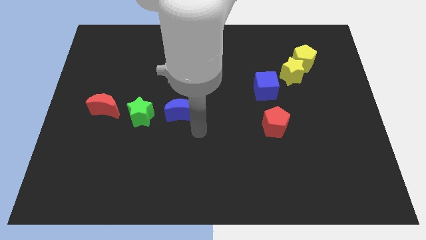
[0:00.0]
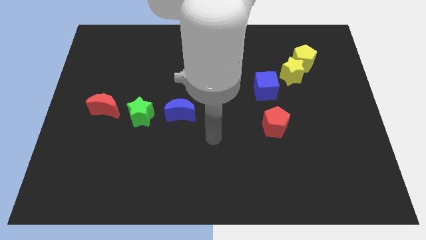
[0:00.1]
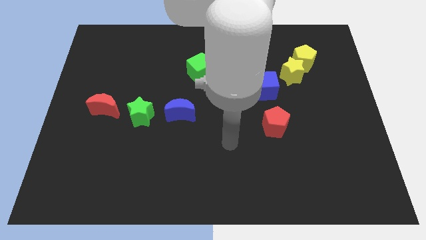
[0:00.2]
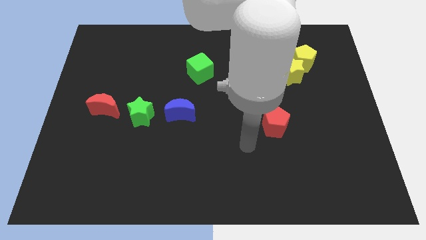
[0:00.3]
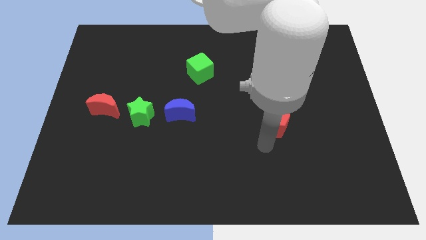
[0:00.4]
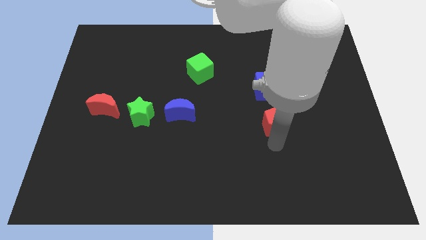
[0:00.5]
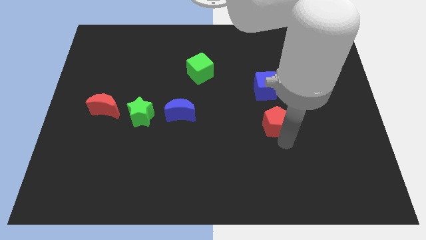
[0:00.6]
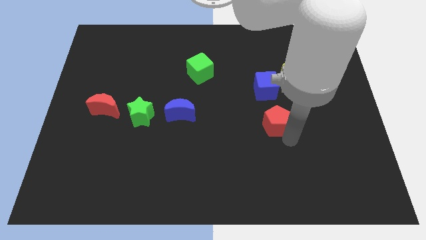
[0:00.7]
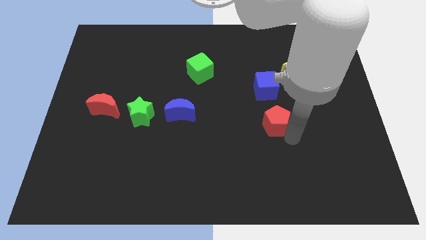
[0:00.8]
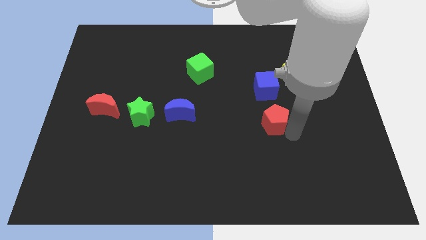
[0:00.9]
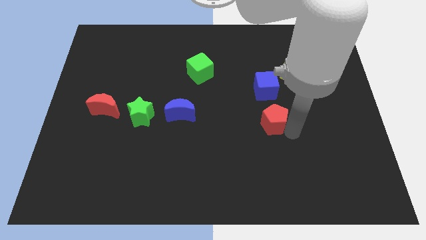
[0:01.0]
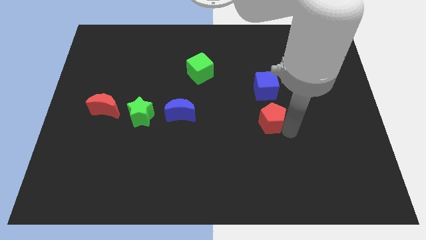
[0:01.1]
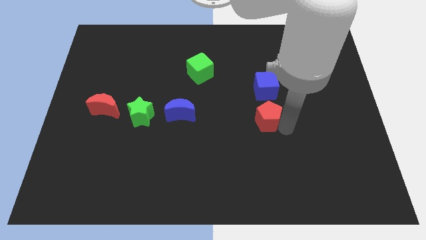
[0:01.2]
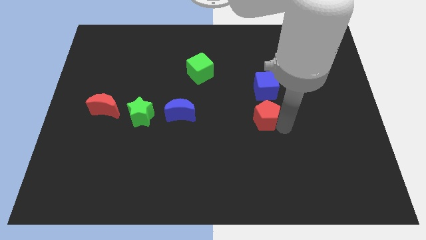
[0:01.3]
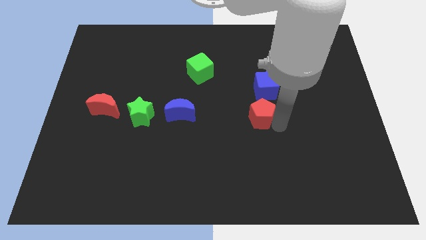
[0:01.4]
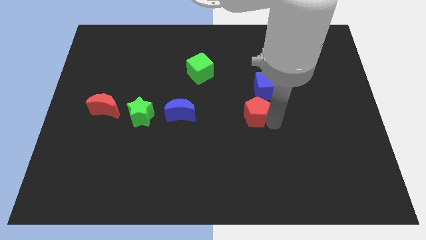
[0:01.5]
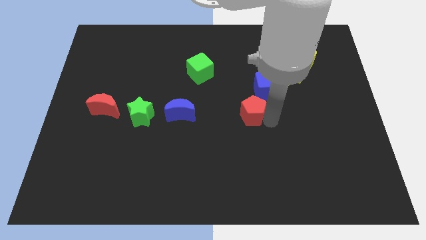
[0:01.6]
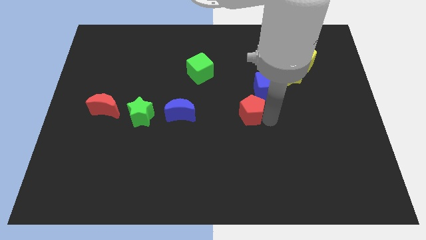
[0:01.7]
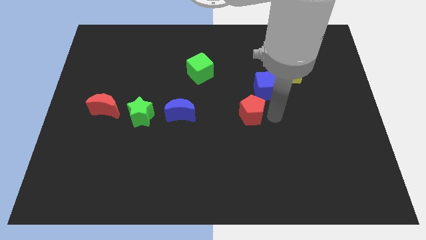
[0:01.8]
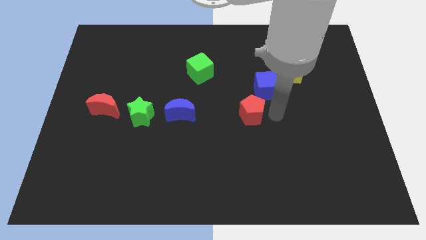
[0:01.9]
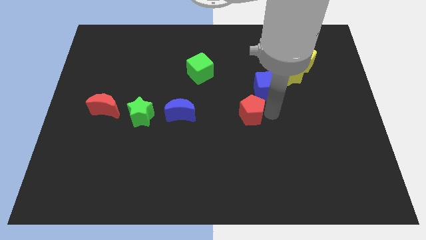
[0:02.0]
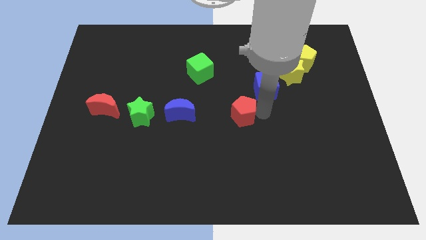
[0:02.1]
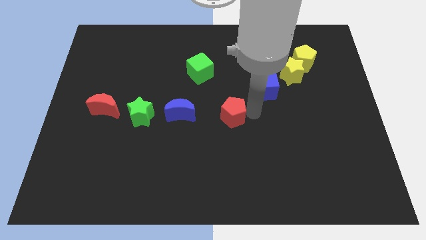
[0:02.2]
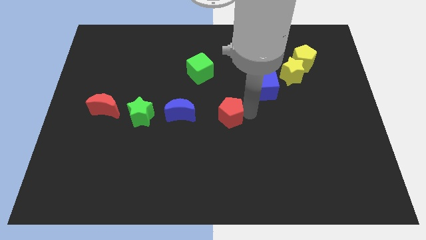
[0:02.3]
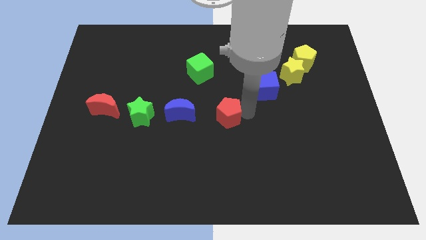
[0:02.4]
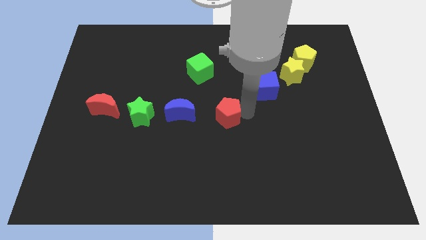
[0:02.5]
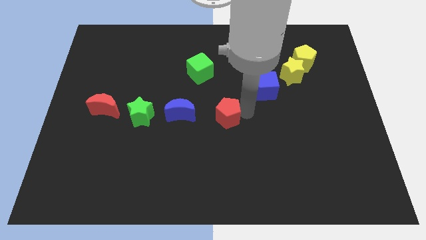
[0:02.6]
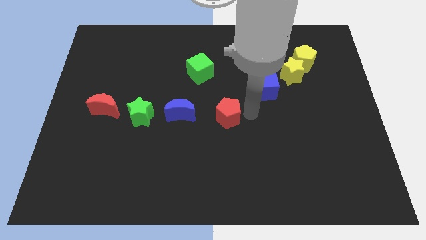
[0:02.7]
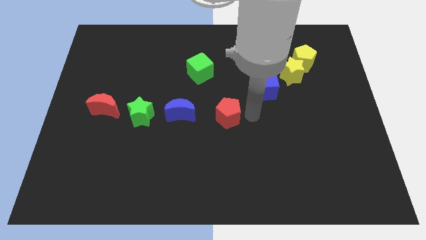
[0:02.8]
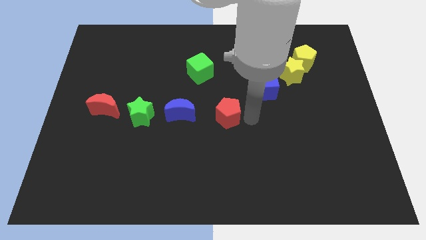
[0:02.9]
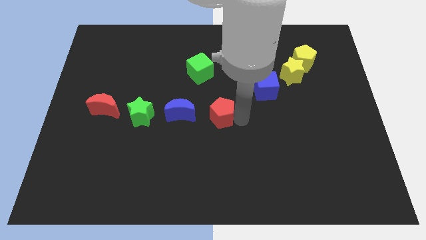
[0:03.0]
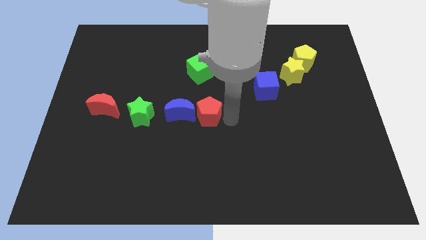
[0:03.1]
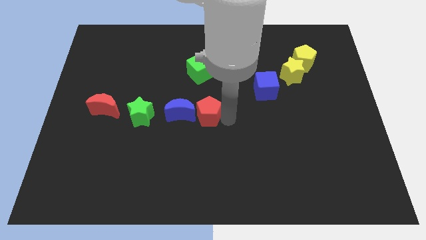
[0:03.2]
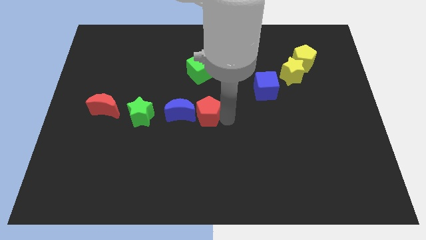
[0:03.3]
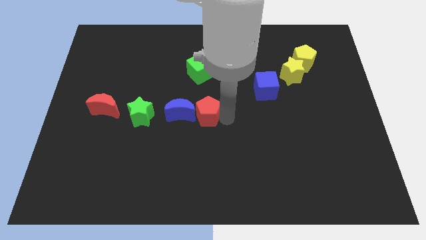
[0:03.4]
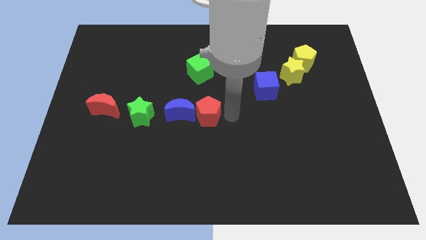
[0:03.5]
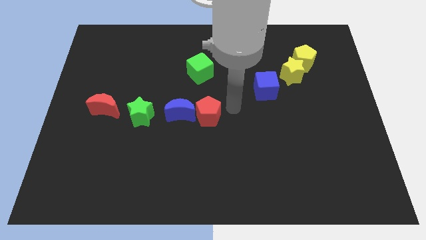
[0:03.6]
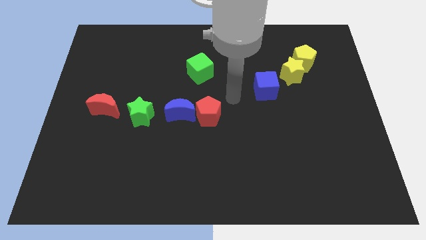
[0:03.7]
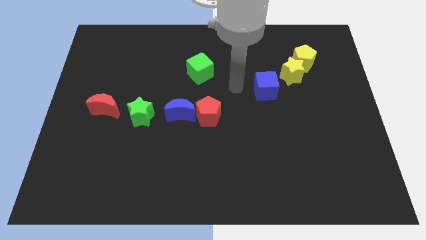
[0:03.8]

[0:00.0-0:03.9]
place the red pentagon to the right side of the blue moon

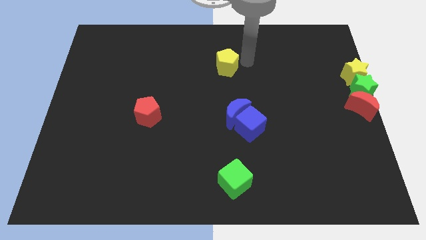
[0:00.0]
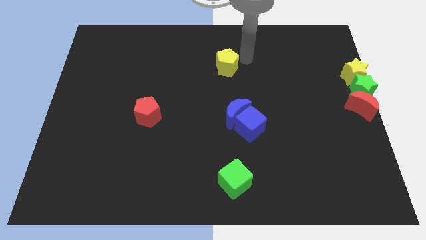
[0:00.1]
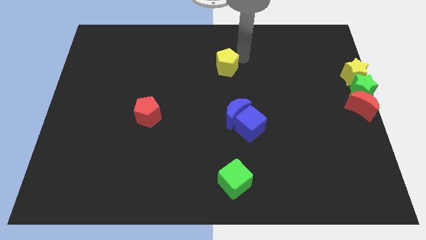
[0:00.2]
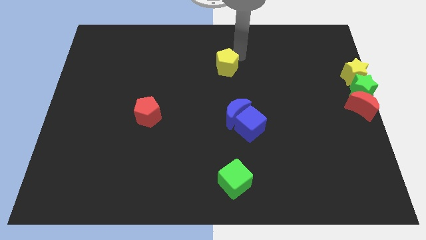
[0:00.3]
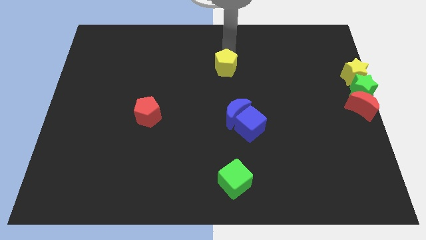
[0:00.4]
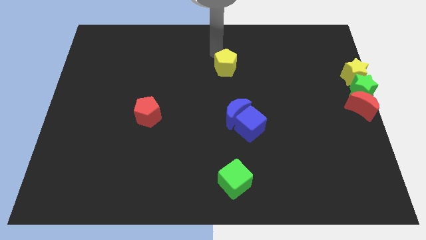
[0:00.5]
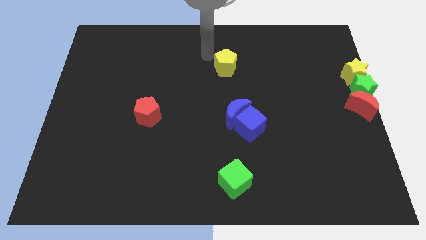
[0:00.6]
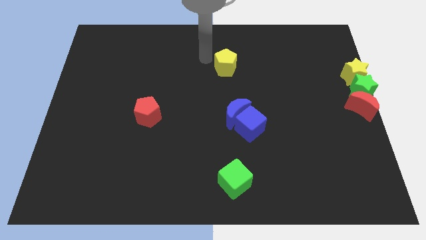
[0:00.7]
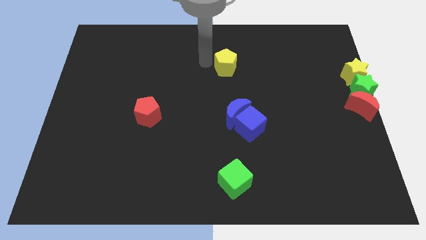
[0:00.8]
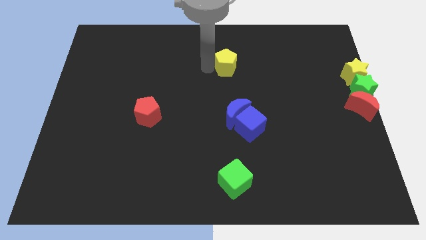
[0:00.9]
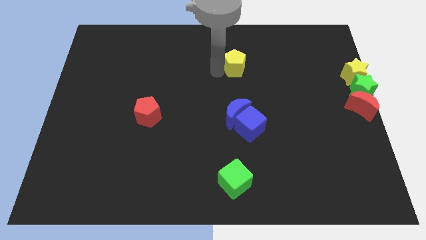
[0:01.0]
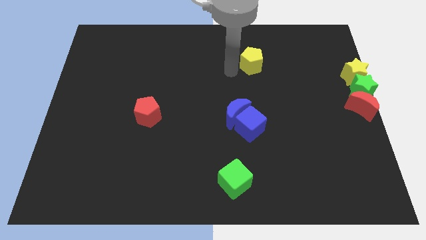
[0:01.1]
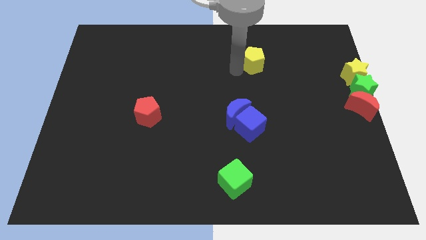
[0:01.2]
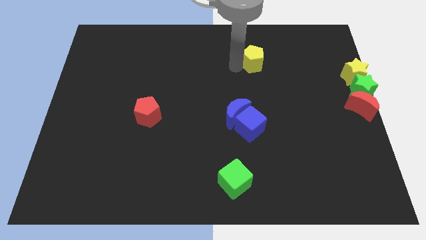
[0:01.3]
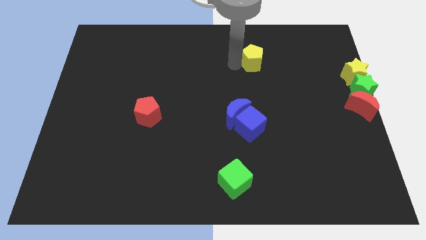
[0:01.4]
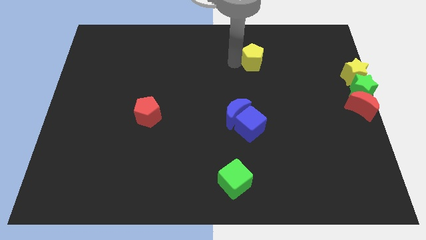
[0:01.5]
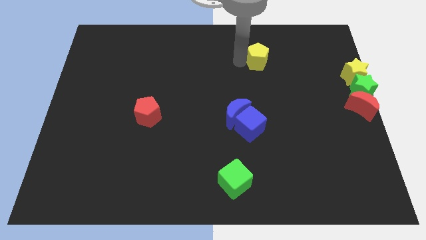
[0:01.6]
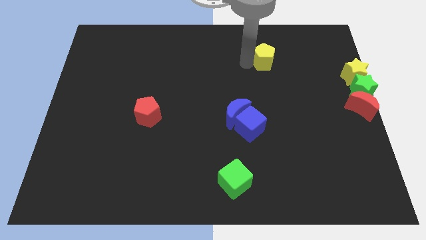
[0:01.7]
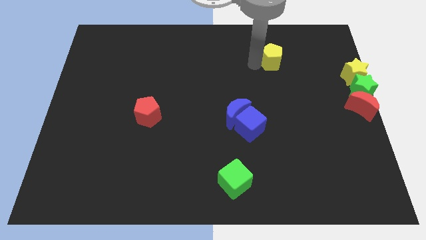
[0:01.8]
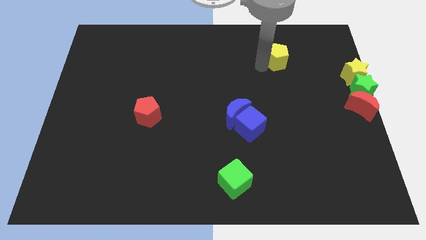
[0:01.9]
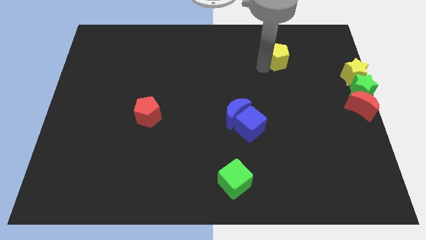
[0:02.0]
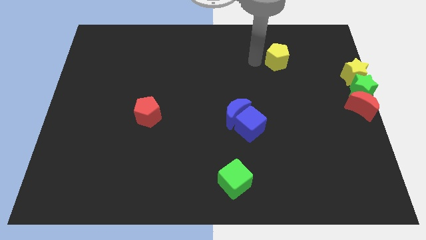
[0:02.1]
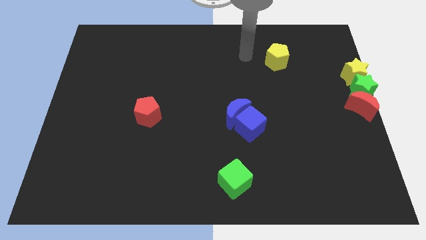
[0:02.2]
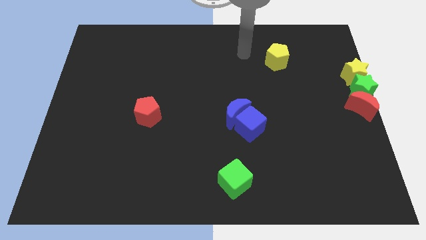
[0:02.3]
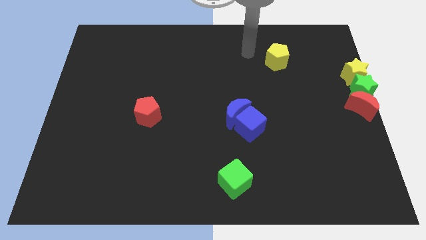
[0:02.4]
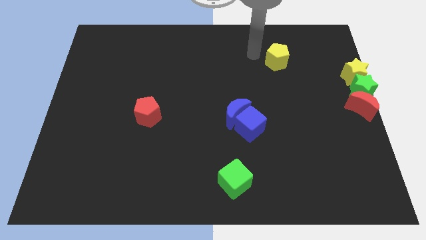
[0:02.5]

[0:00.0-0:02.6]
push the yellow pentagon slightly to the right of the board

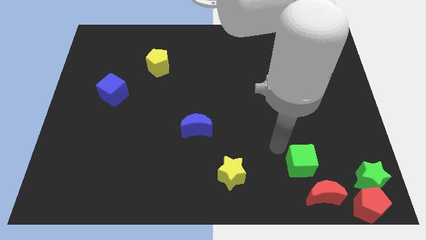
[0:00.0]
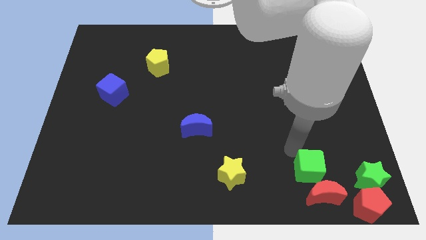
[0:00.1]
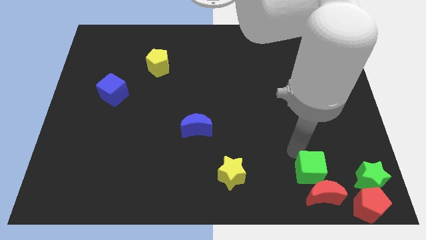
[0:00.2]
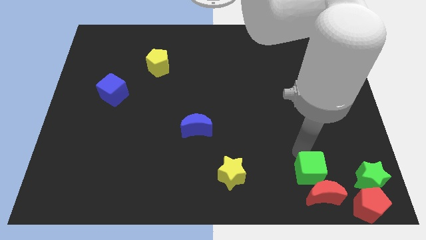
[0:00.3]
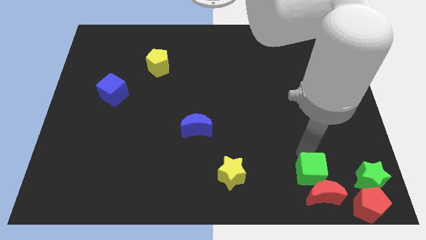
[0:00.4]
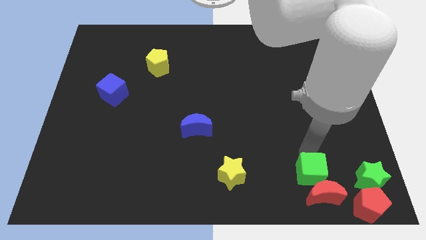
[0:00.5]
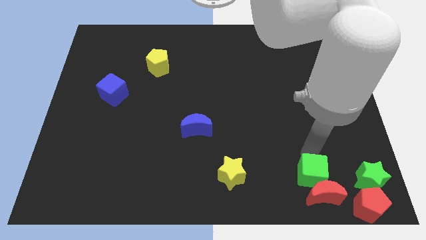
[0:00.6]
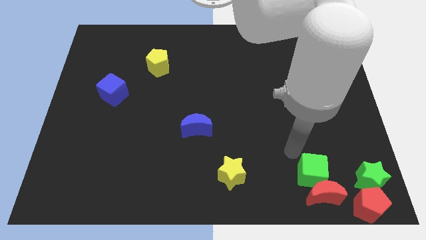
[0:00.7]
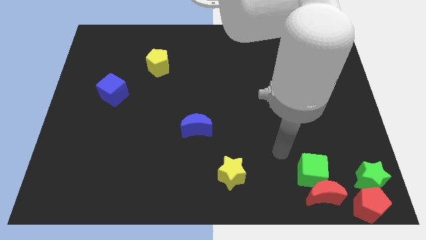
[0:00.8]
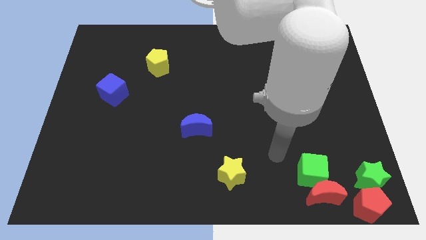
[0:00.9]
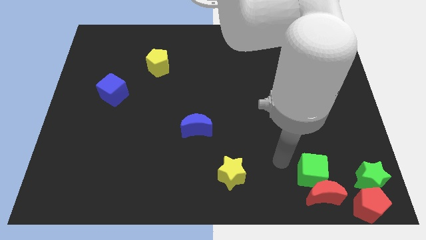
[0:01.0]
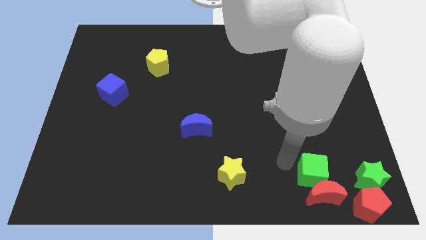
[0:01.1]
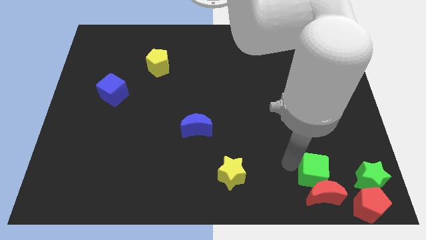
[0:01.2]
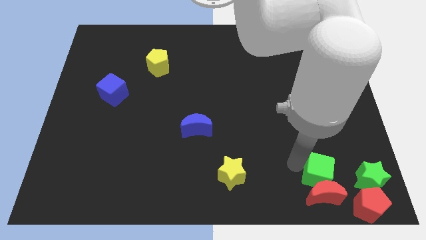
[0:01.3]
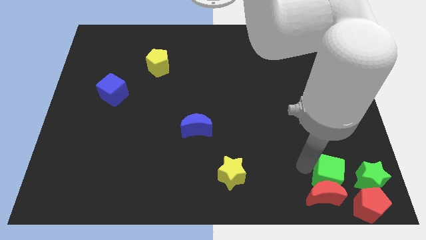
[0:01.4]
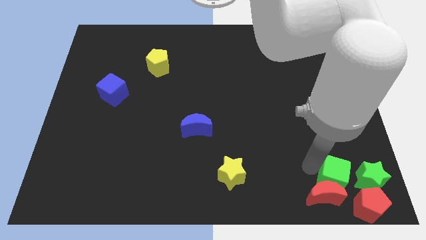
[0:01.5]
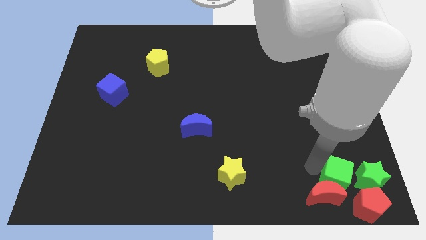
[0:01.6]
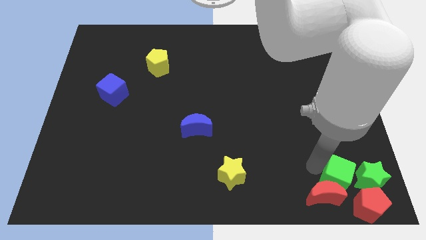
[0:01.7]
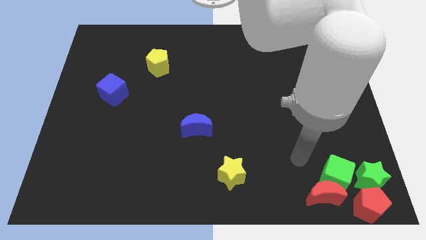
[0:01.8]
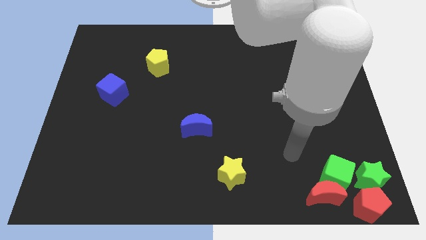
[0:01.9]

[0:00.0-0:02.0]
move the green cube left to the green star

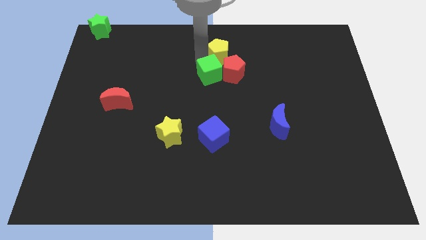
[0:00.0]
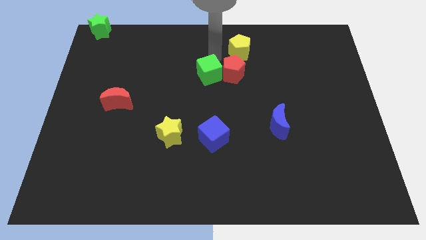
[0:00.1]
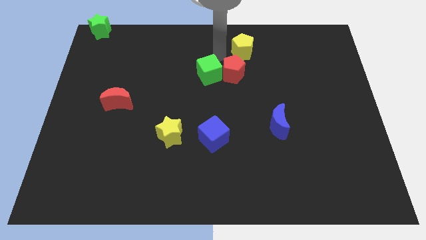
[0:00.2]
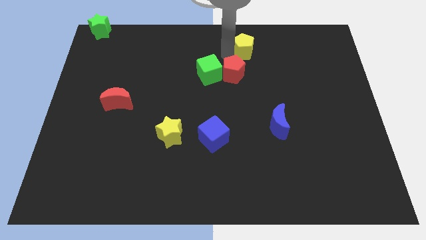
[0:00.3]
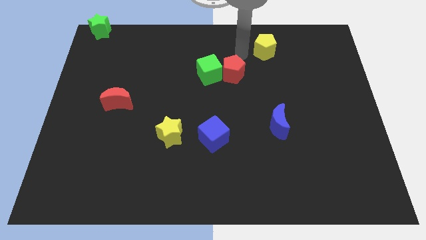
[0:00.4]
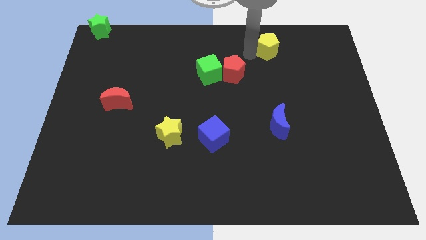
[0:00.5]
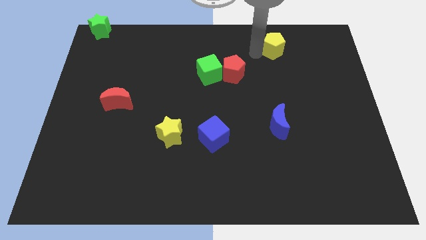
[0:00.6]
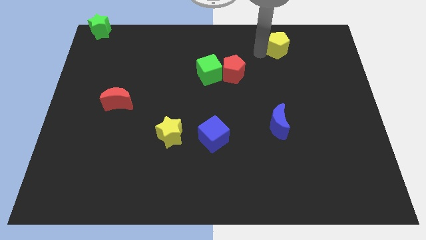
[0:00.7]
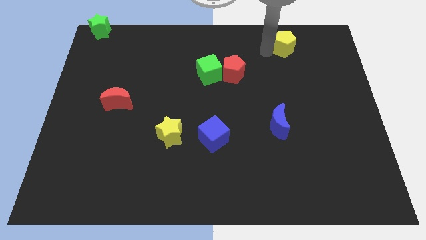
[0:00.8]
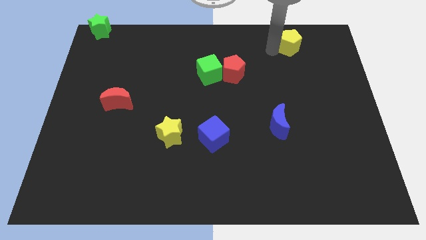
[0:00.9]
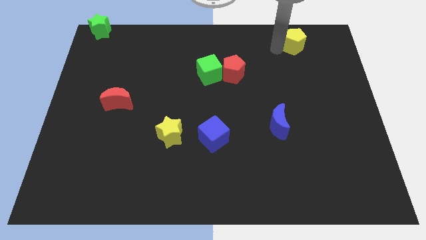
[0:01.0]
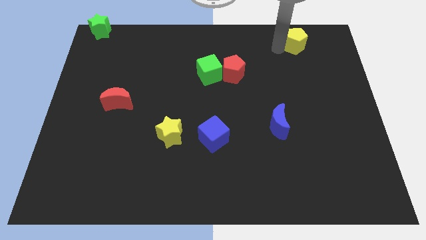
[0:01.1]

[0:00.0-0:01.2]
separate yellow pentagon from green cube
